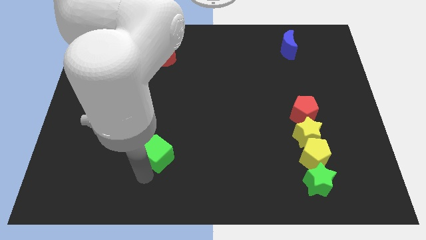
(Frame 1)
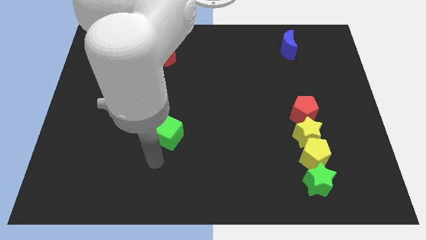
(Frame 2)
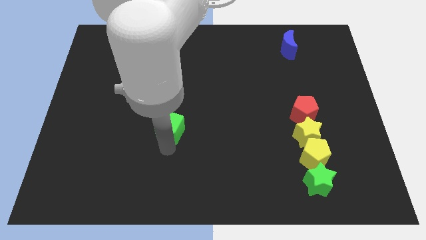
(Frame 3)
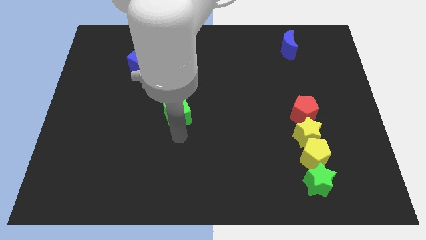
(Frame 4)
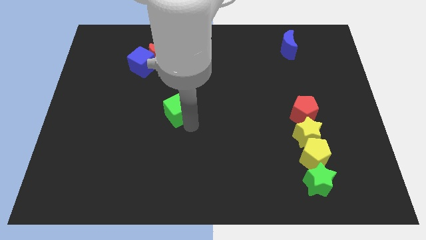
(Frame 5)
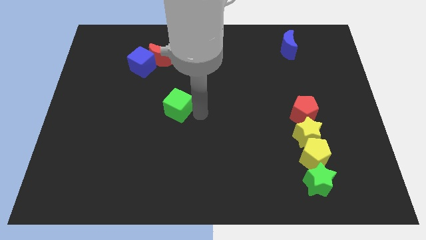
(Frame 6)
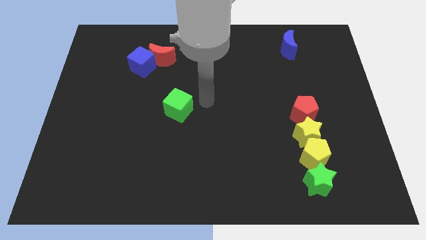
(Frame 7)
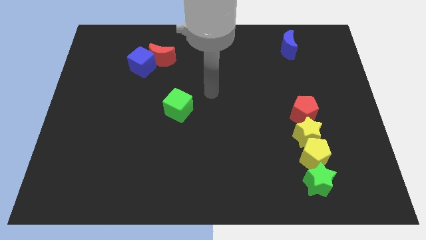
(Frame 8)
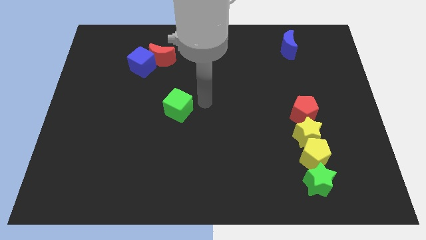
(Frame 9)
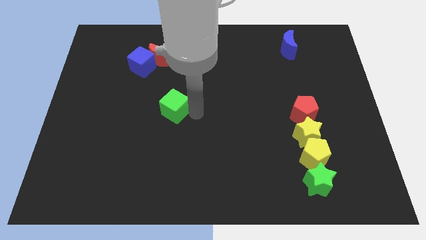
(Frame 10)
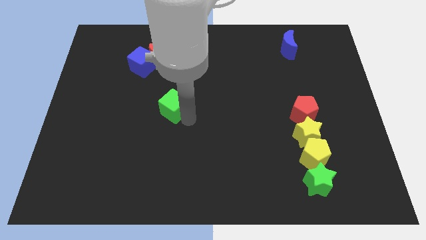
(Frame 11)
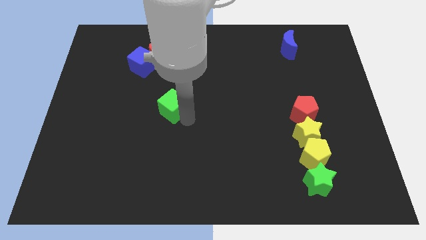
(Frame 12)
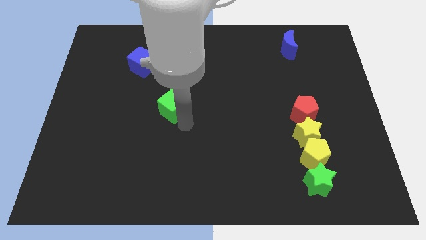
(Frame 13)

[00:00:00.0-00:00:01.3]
place the green cube underneath the red moon

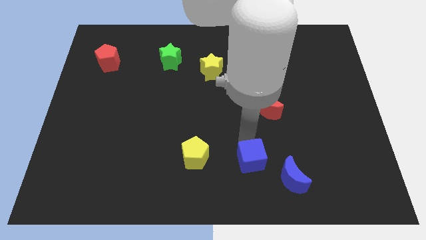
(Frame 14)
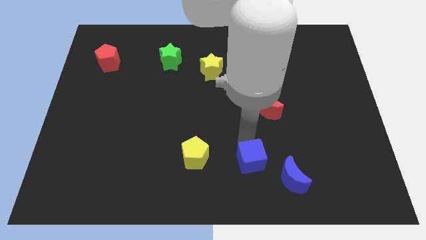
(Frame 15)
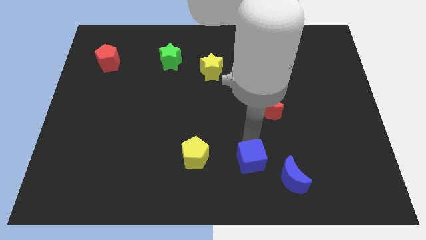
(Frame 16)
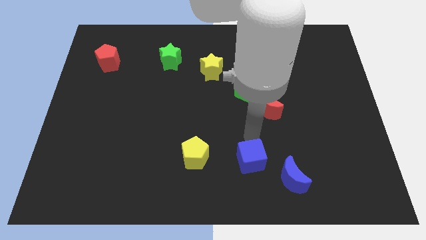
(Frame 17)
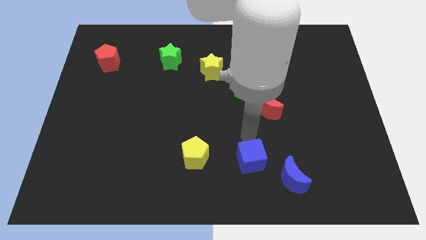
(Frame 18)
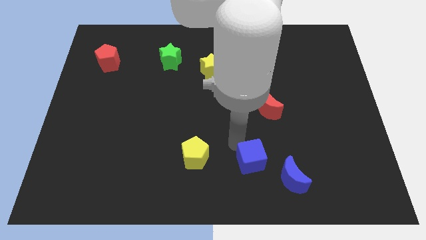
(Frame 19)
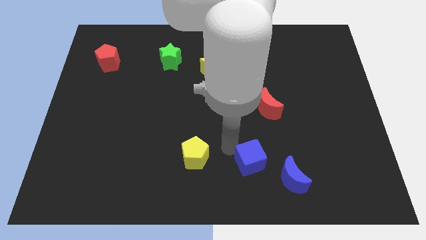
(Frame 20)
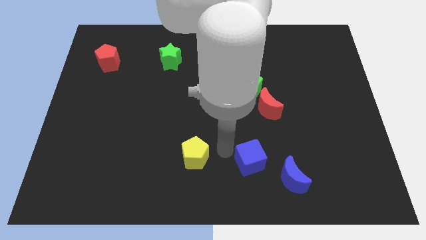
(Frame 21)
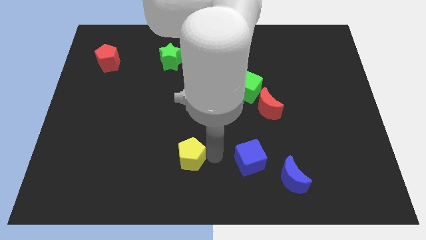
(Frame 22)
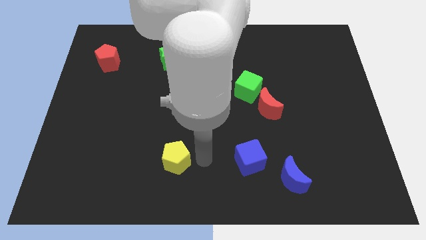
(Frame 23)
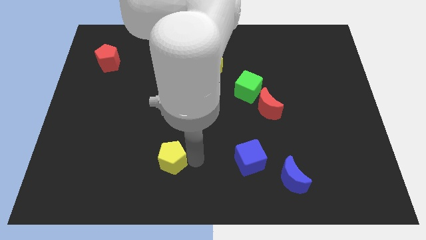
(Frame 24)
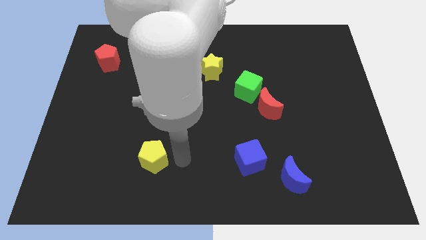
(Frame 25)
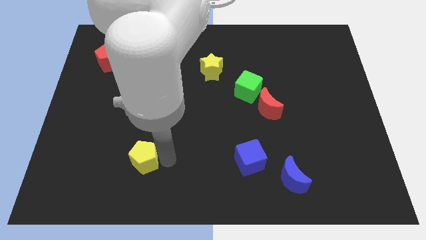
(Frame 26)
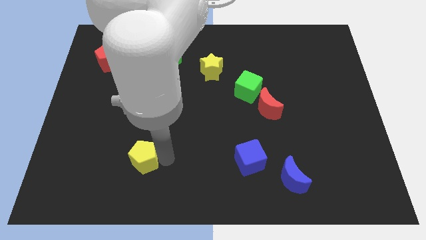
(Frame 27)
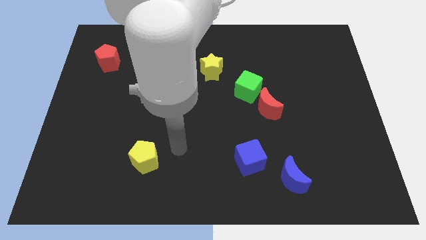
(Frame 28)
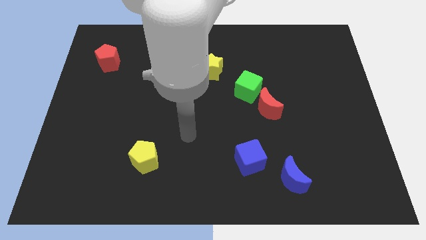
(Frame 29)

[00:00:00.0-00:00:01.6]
push the yellow pentagon towards left side

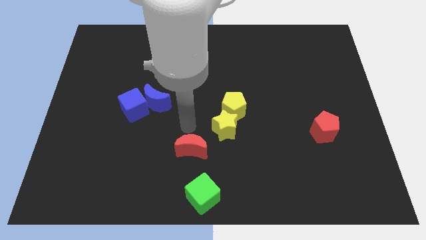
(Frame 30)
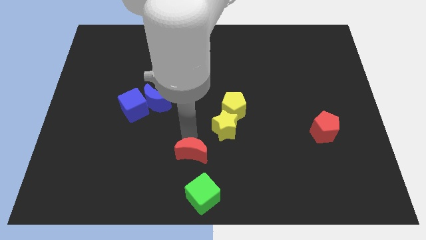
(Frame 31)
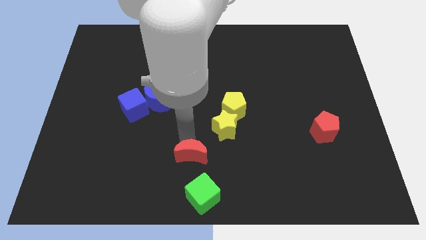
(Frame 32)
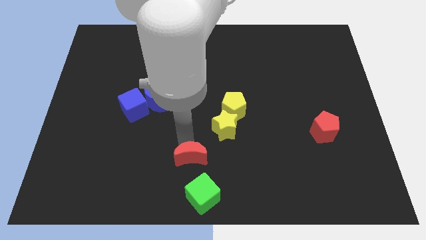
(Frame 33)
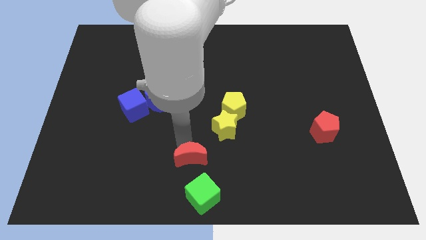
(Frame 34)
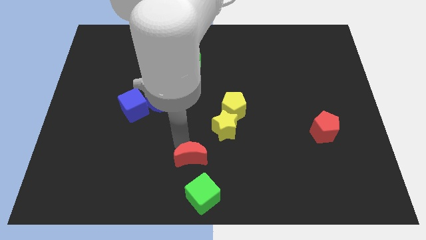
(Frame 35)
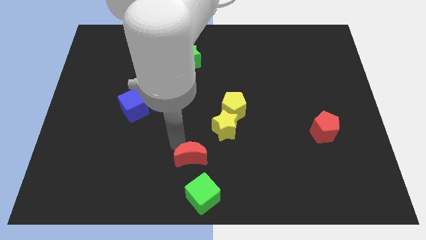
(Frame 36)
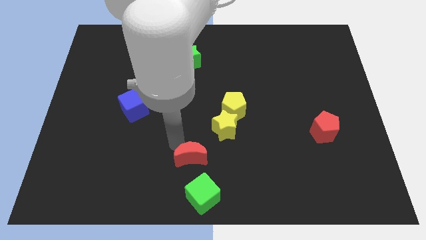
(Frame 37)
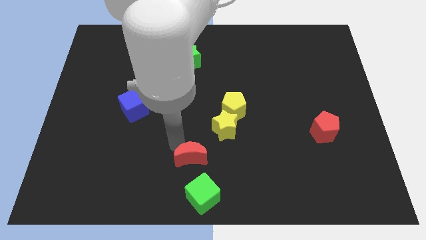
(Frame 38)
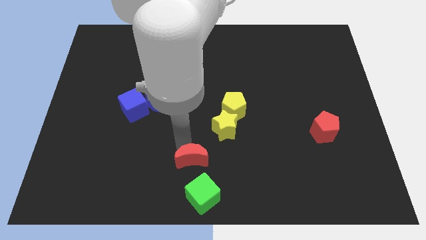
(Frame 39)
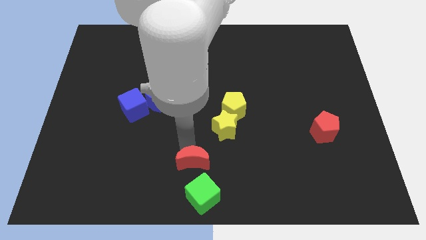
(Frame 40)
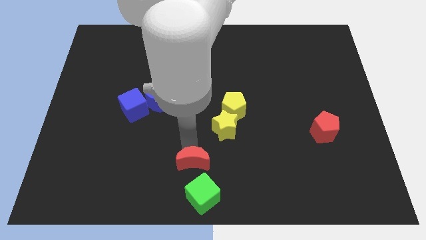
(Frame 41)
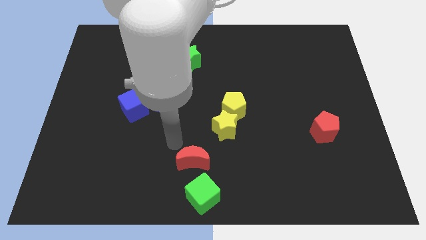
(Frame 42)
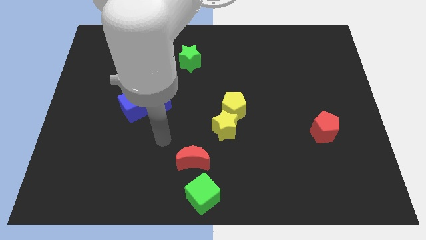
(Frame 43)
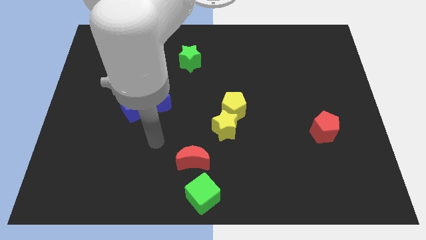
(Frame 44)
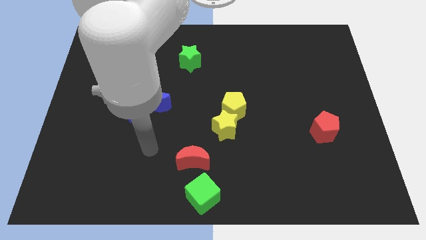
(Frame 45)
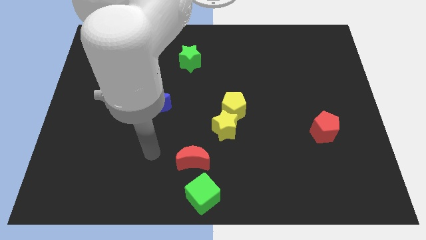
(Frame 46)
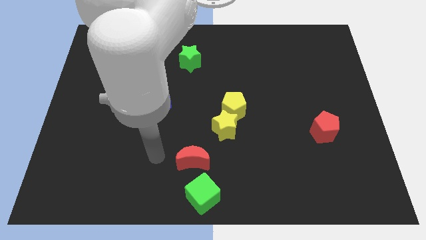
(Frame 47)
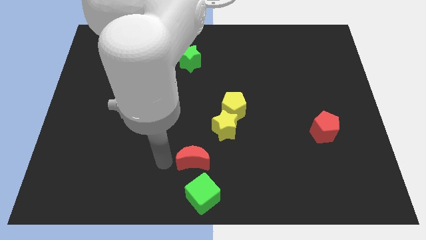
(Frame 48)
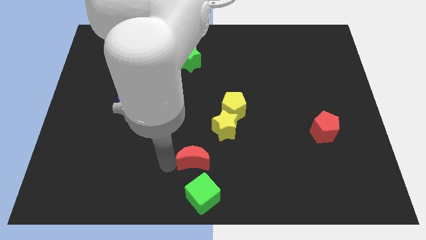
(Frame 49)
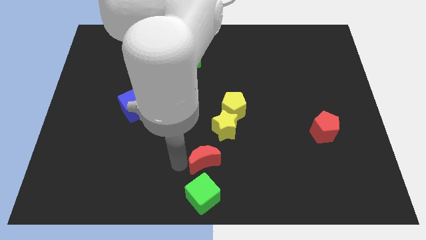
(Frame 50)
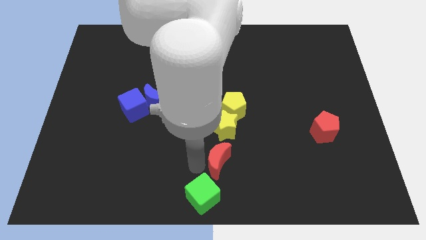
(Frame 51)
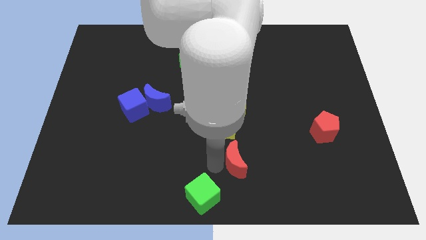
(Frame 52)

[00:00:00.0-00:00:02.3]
place the red crescent below the yellow star

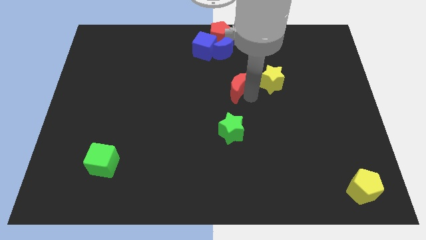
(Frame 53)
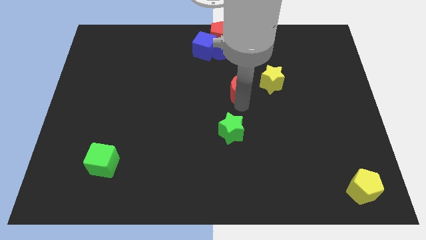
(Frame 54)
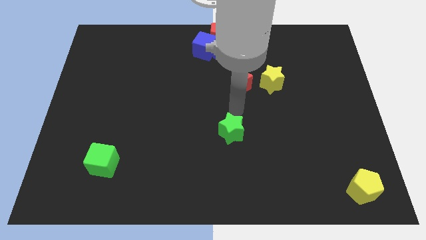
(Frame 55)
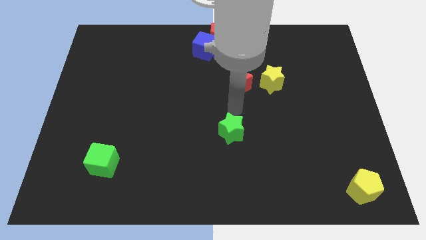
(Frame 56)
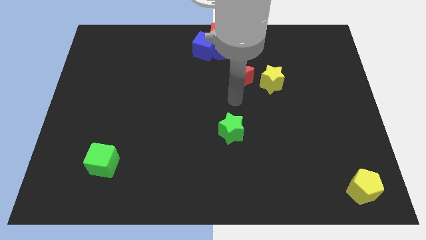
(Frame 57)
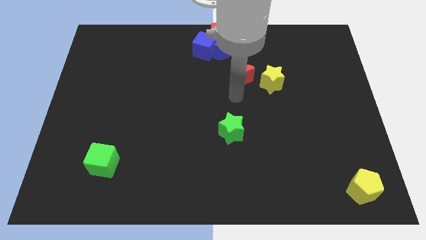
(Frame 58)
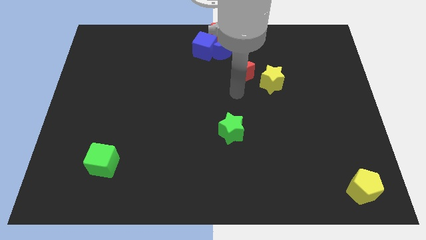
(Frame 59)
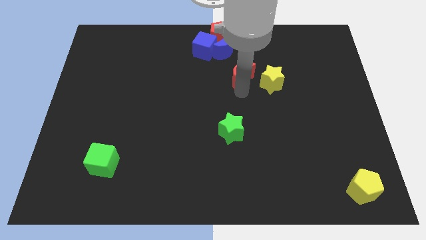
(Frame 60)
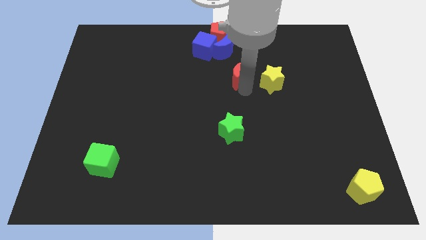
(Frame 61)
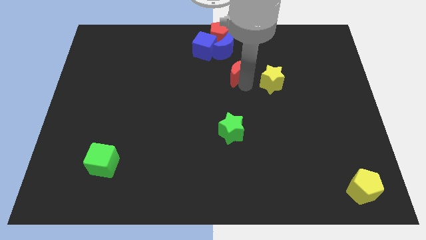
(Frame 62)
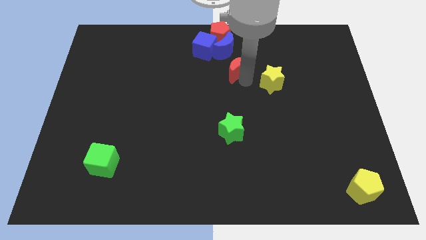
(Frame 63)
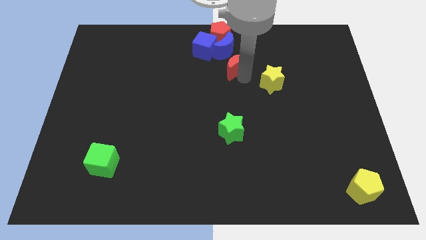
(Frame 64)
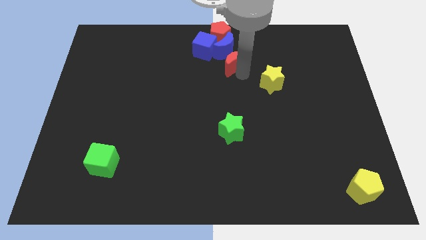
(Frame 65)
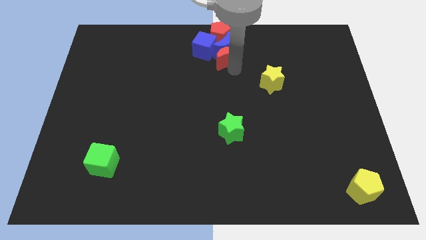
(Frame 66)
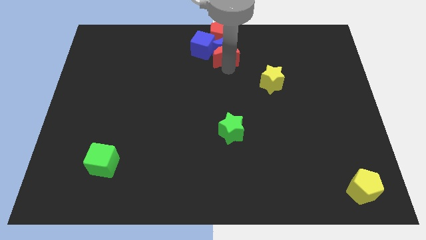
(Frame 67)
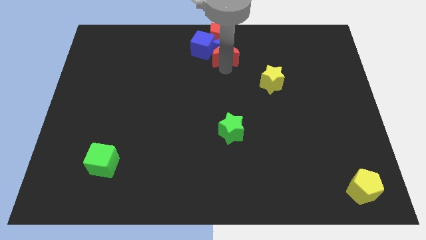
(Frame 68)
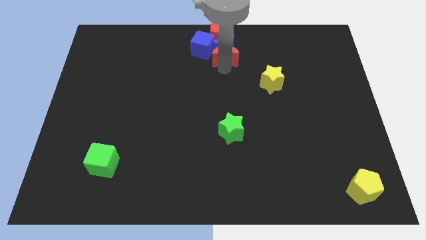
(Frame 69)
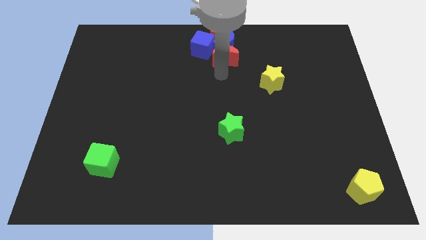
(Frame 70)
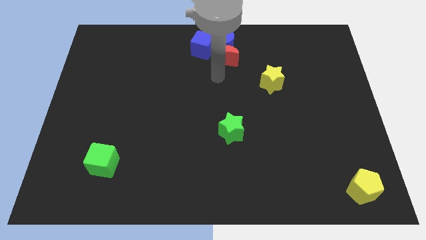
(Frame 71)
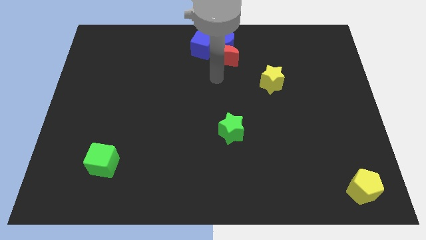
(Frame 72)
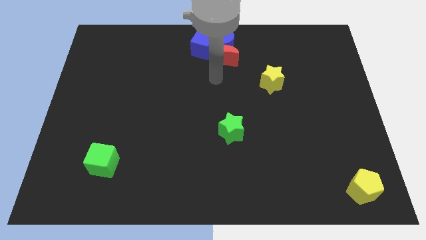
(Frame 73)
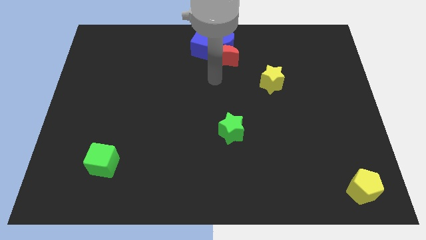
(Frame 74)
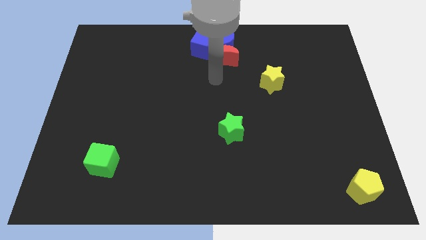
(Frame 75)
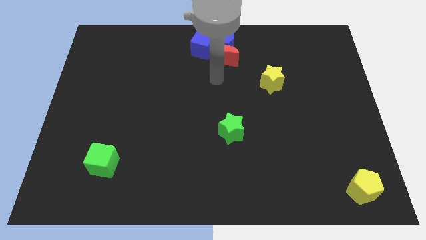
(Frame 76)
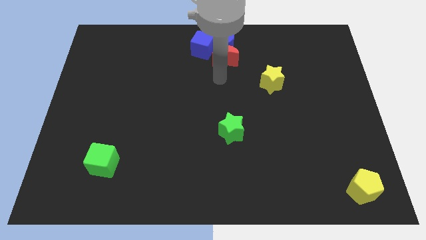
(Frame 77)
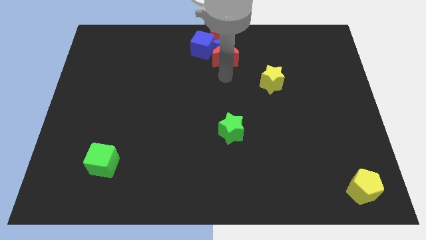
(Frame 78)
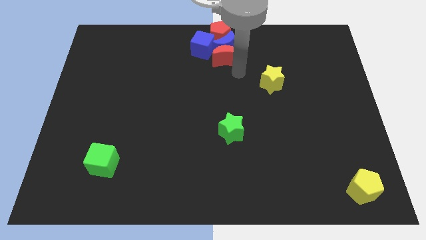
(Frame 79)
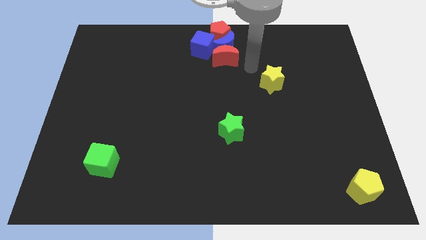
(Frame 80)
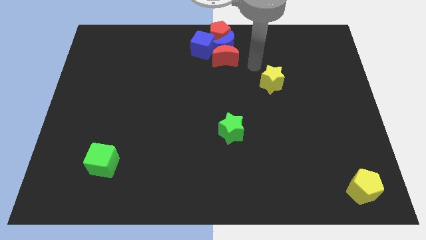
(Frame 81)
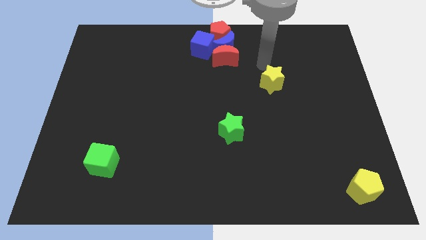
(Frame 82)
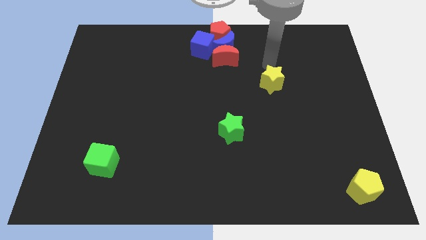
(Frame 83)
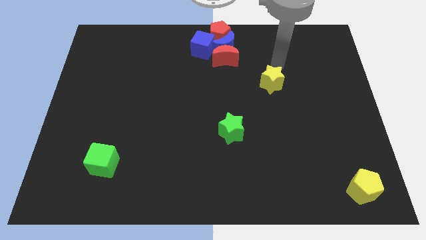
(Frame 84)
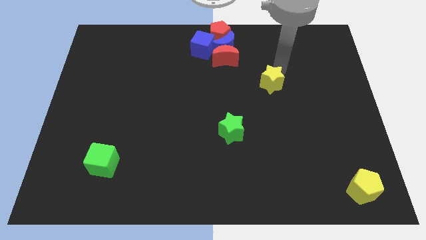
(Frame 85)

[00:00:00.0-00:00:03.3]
move red moon close to the blue moon

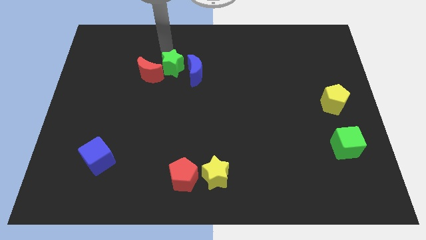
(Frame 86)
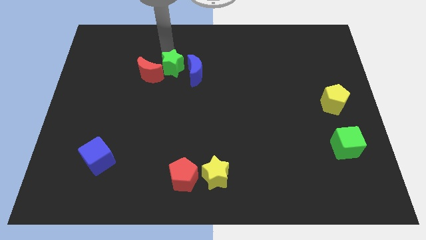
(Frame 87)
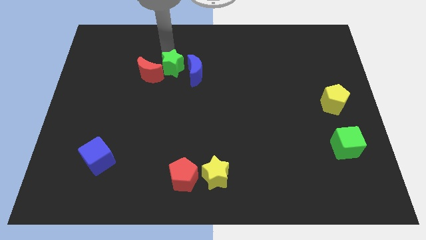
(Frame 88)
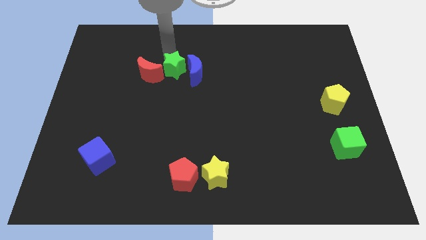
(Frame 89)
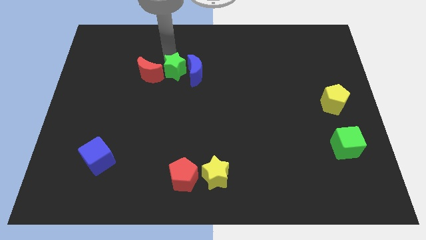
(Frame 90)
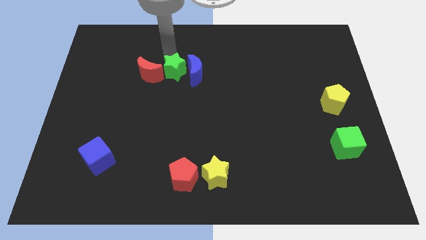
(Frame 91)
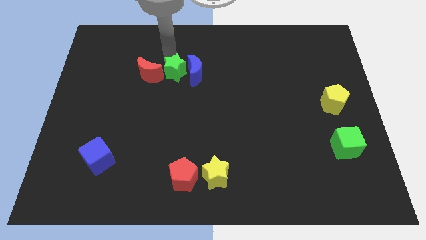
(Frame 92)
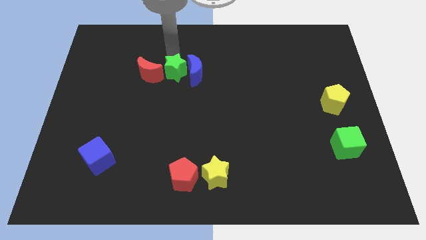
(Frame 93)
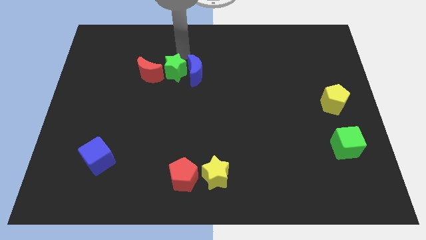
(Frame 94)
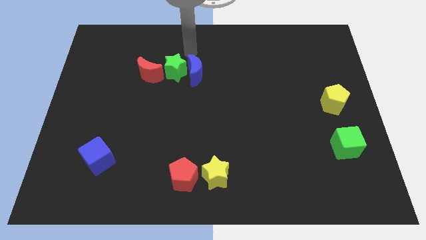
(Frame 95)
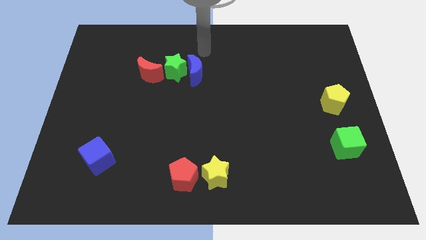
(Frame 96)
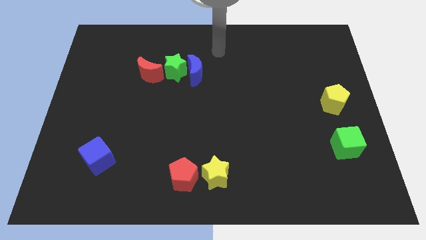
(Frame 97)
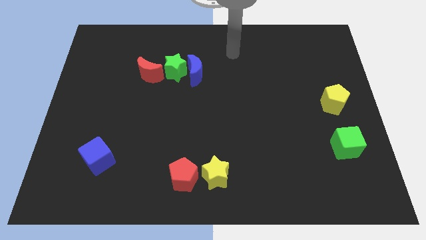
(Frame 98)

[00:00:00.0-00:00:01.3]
move green star in between blue and red crescent
